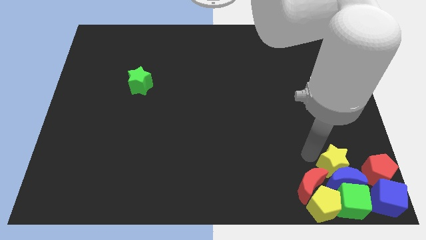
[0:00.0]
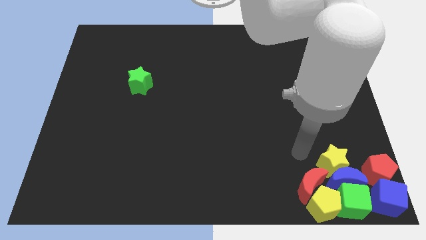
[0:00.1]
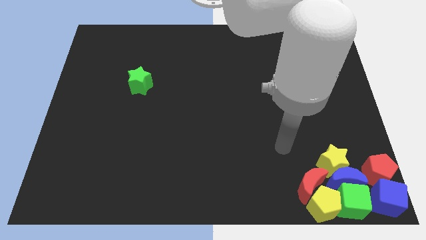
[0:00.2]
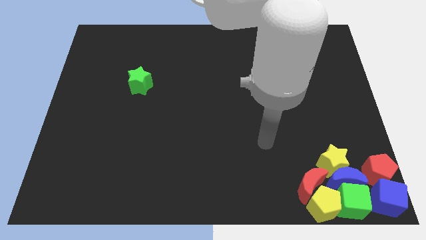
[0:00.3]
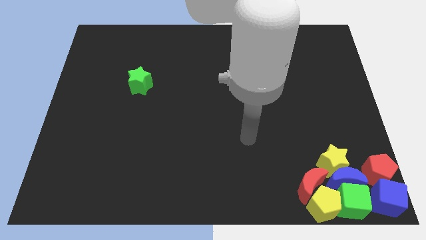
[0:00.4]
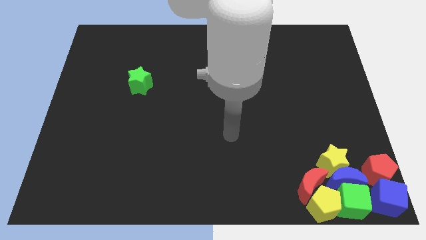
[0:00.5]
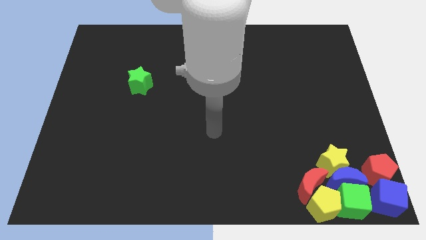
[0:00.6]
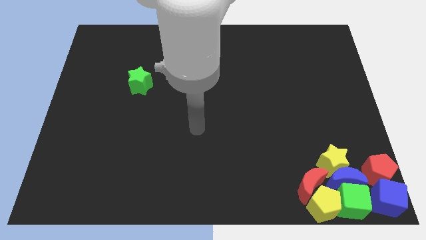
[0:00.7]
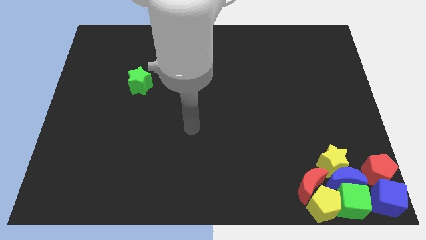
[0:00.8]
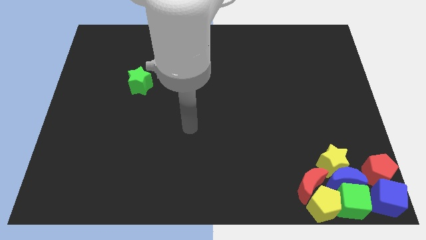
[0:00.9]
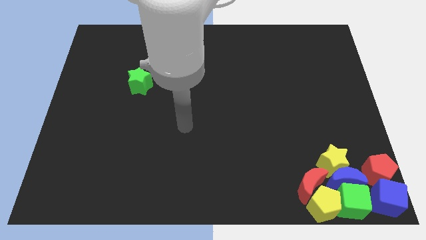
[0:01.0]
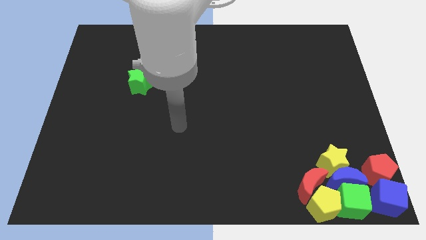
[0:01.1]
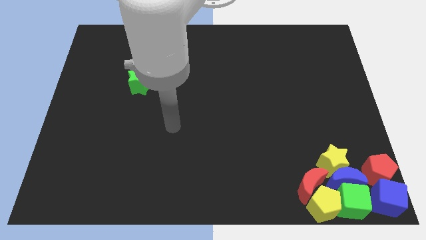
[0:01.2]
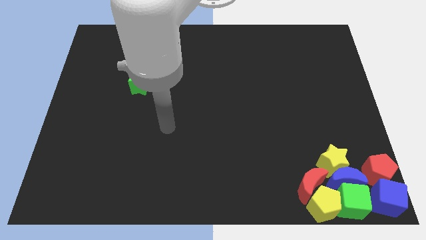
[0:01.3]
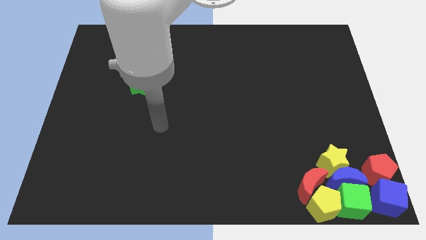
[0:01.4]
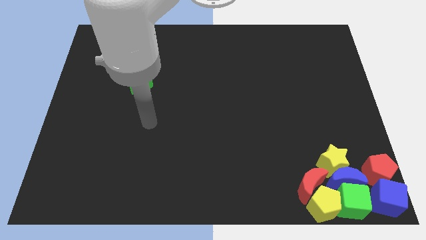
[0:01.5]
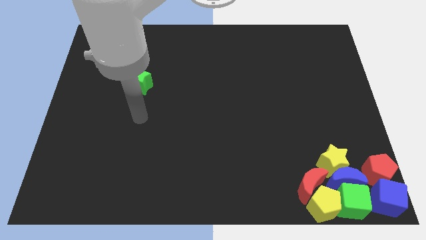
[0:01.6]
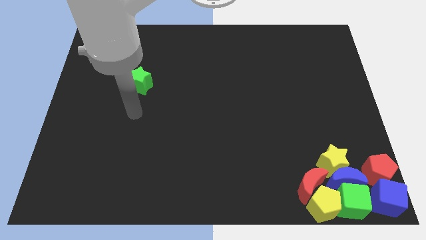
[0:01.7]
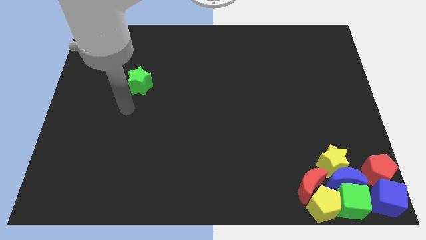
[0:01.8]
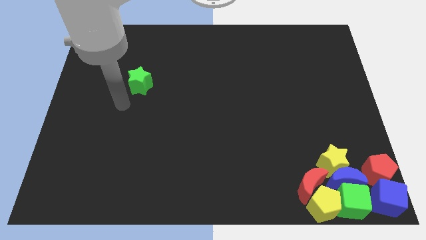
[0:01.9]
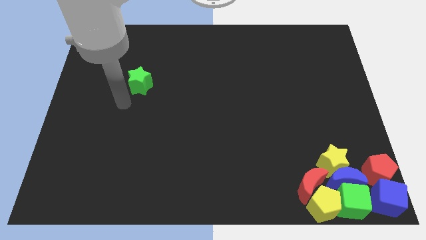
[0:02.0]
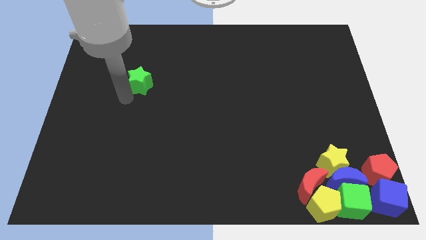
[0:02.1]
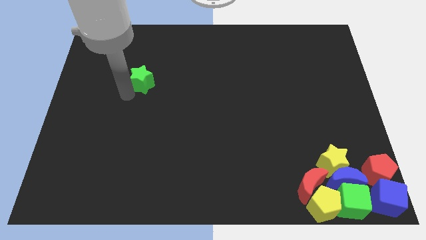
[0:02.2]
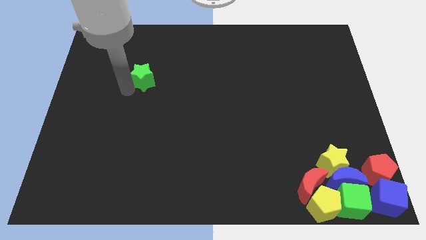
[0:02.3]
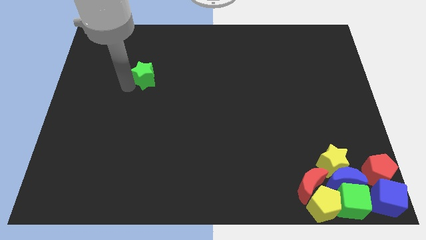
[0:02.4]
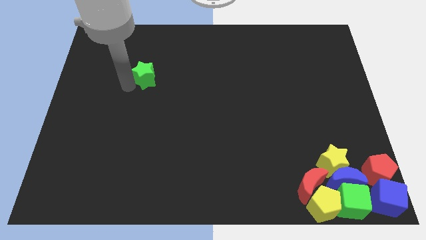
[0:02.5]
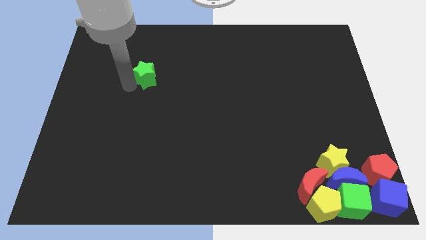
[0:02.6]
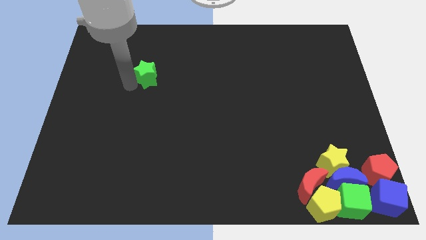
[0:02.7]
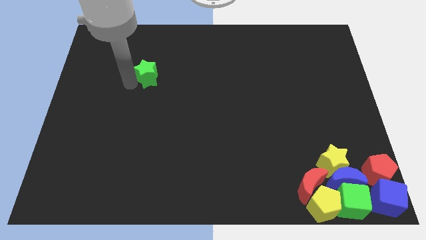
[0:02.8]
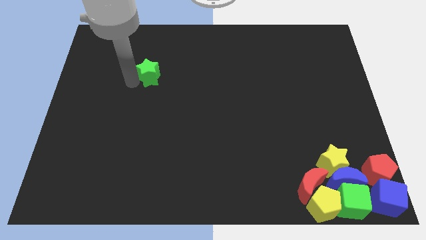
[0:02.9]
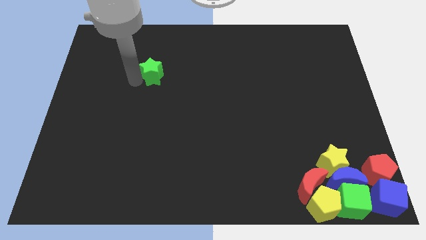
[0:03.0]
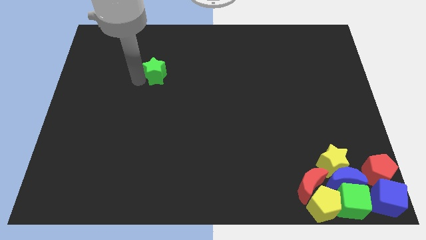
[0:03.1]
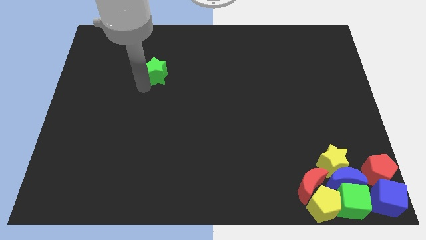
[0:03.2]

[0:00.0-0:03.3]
push the green star towards the top side of the board

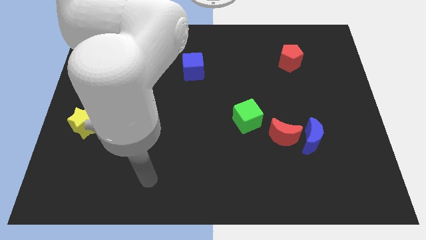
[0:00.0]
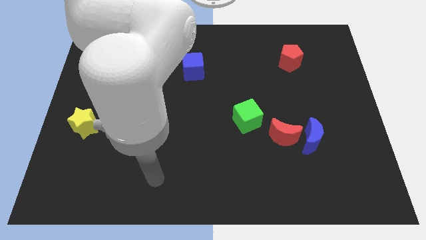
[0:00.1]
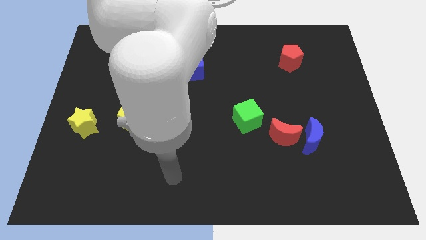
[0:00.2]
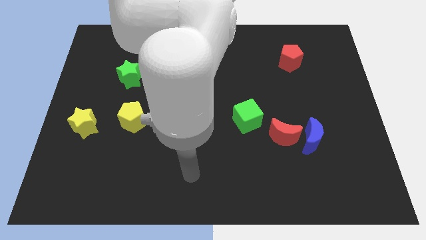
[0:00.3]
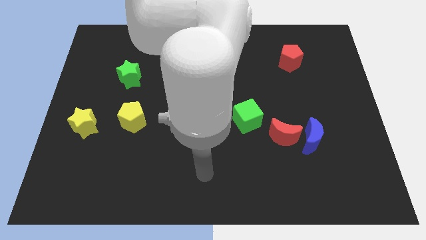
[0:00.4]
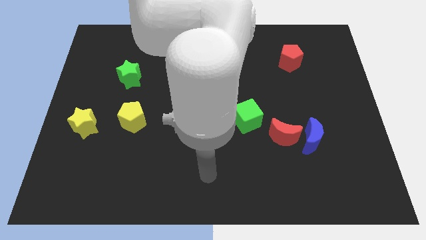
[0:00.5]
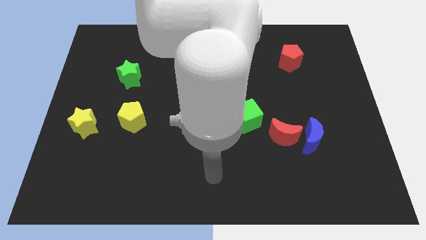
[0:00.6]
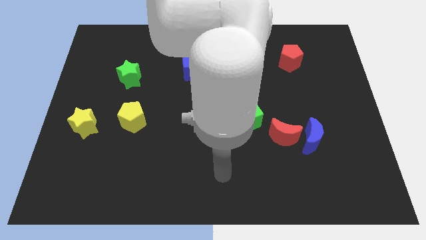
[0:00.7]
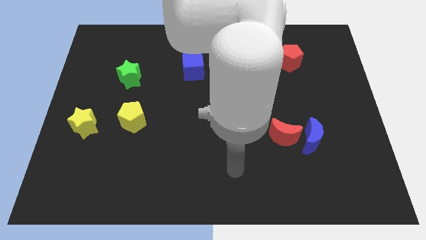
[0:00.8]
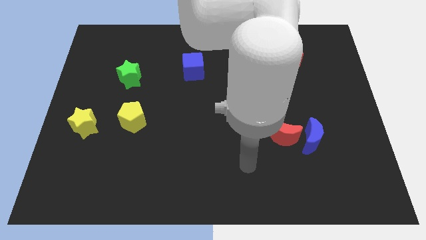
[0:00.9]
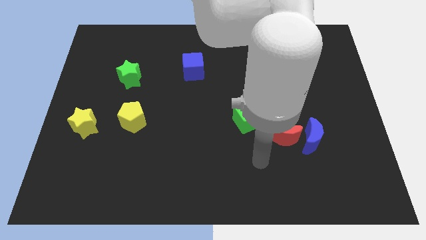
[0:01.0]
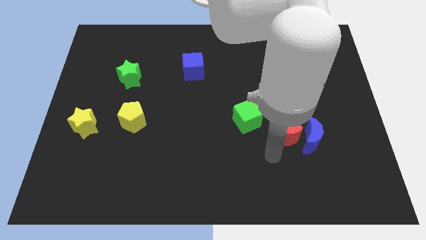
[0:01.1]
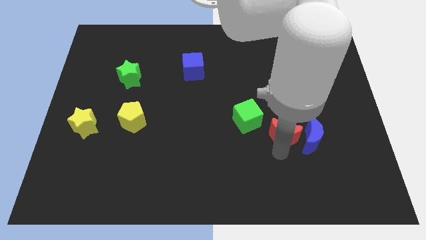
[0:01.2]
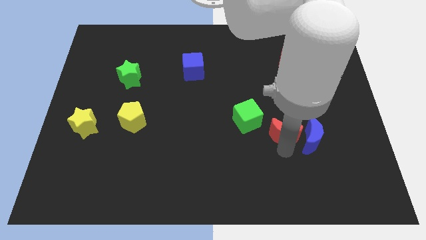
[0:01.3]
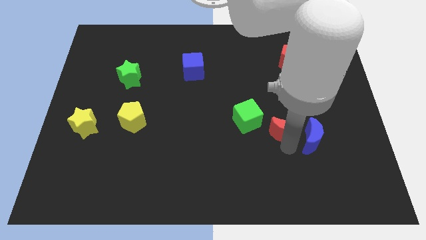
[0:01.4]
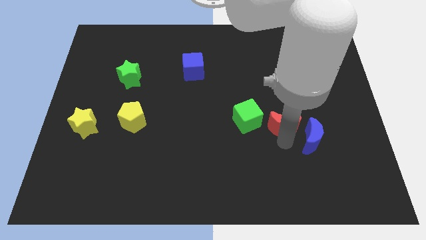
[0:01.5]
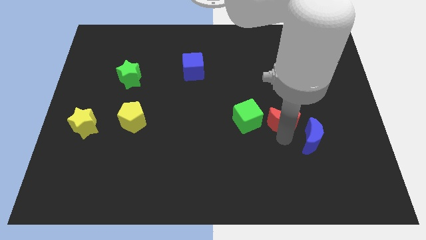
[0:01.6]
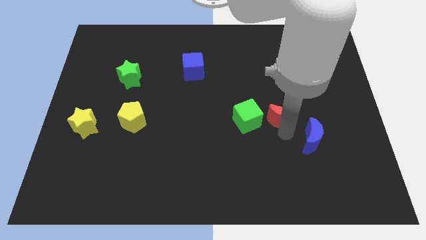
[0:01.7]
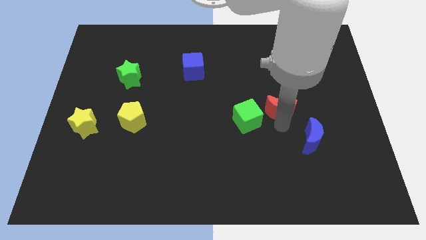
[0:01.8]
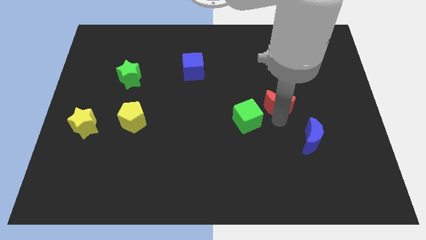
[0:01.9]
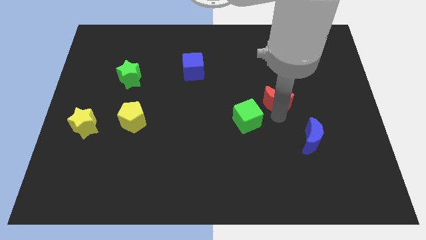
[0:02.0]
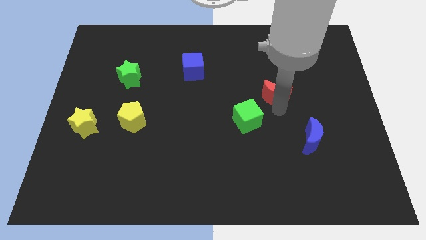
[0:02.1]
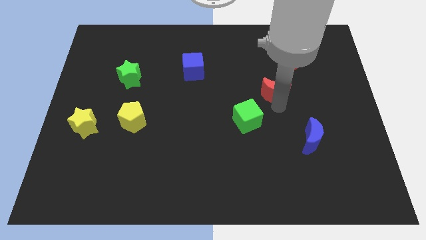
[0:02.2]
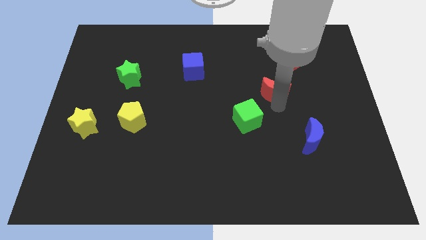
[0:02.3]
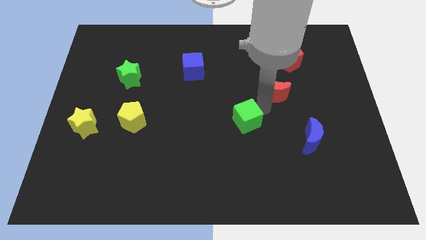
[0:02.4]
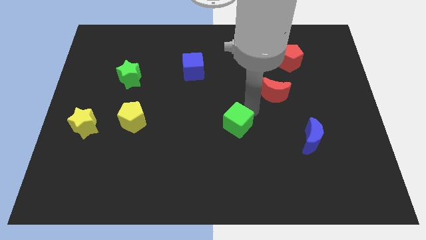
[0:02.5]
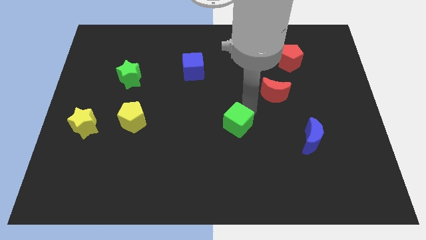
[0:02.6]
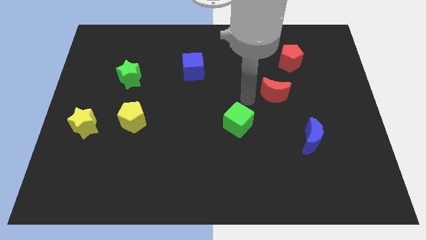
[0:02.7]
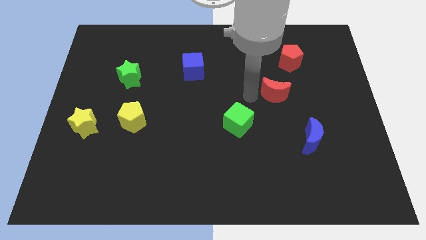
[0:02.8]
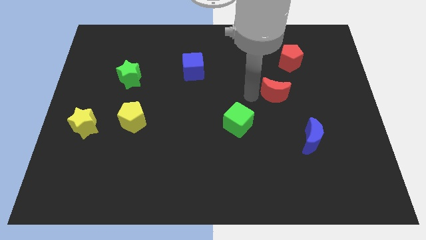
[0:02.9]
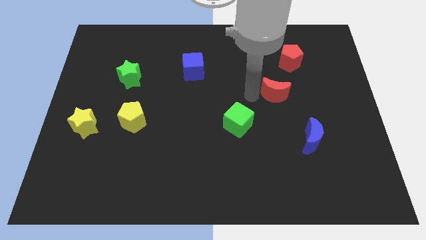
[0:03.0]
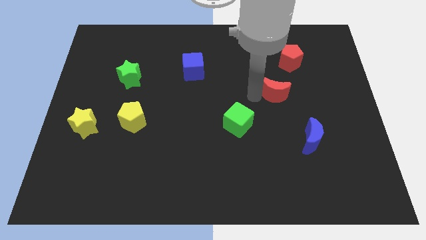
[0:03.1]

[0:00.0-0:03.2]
move the red moon to the center

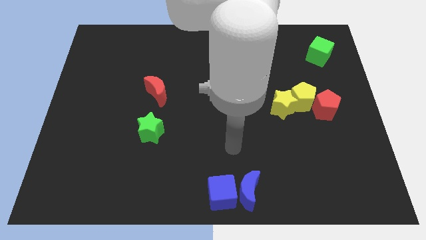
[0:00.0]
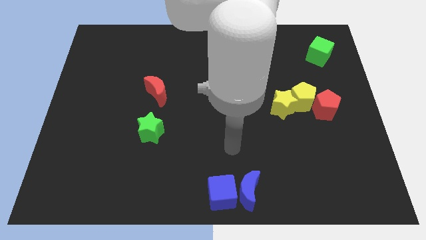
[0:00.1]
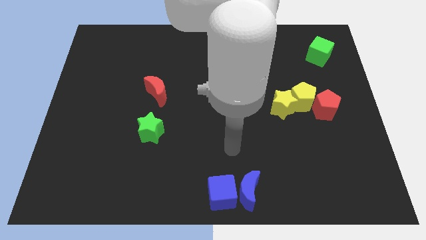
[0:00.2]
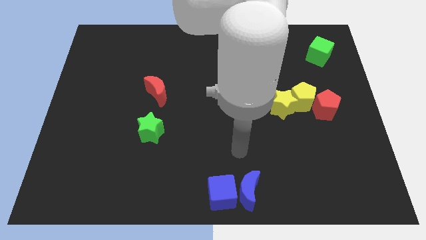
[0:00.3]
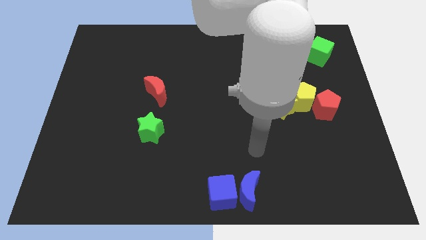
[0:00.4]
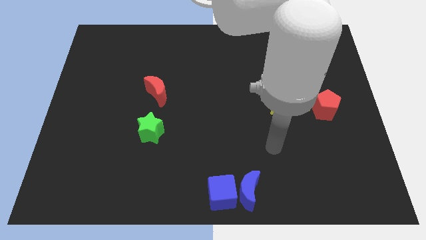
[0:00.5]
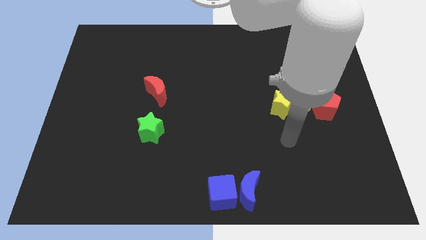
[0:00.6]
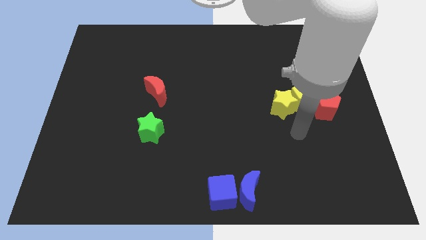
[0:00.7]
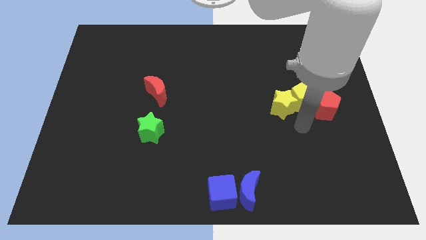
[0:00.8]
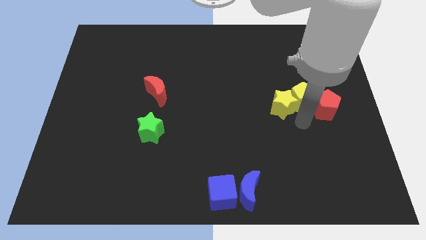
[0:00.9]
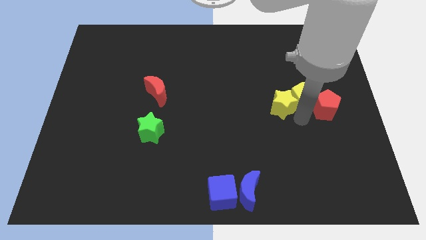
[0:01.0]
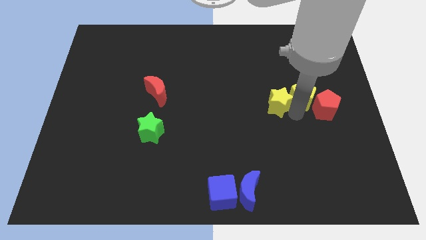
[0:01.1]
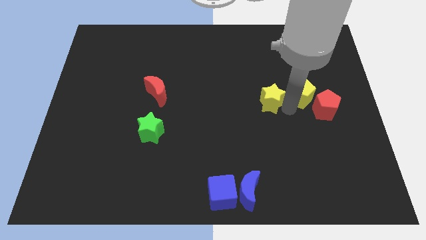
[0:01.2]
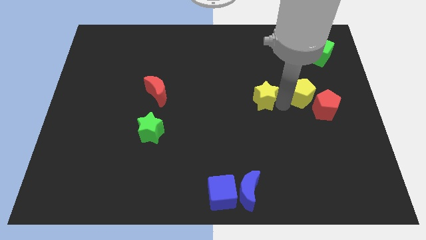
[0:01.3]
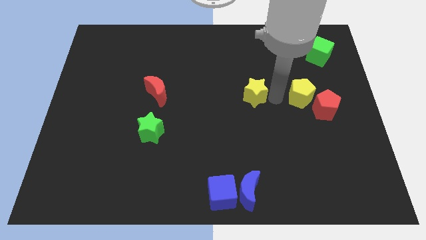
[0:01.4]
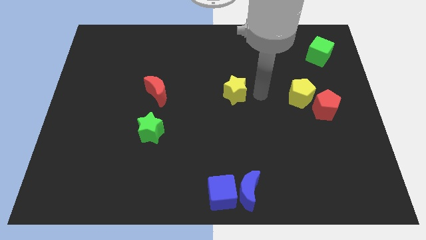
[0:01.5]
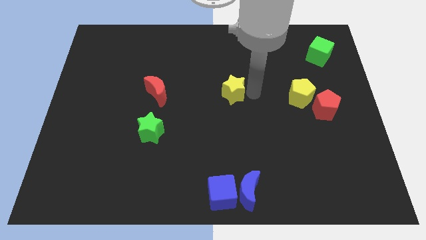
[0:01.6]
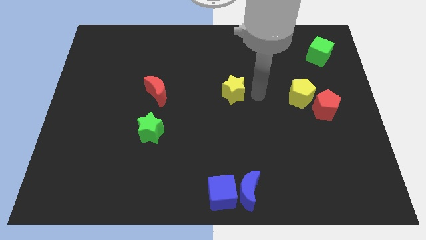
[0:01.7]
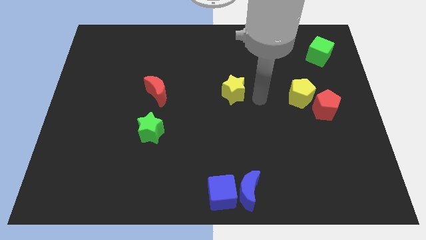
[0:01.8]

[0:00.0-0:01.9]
separate yellow star from the yellow pentagon

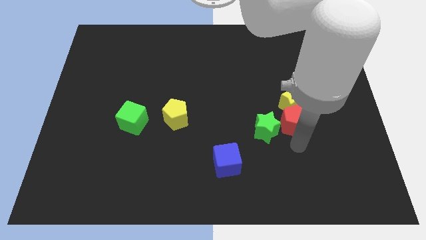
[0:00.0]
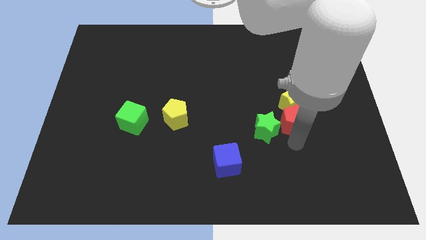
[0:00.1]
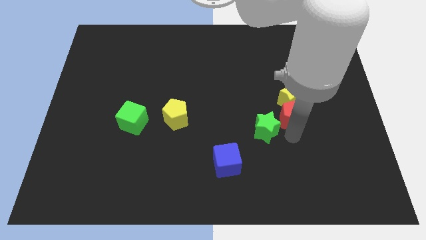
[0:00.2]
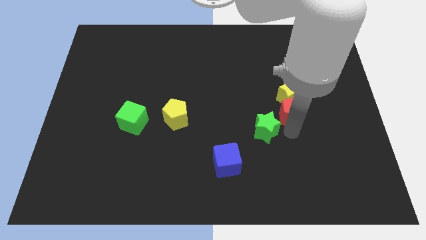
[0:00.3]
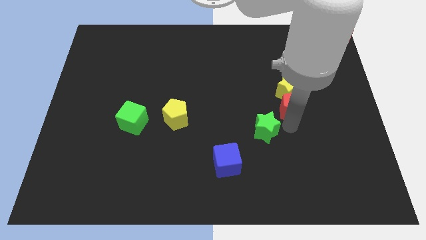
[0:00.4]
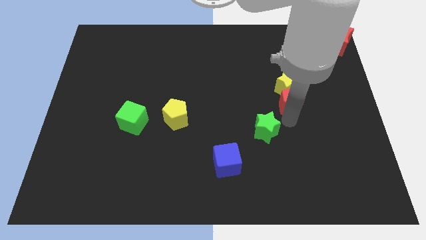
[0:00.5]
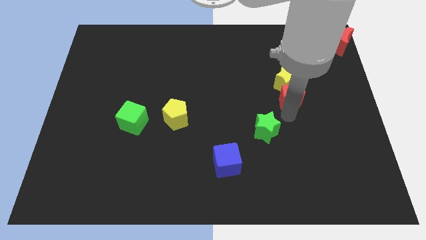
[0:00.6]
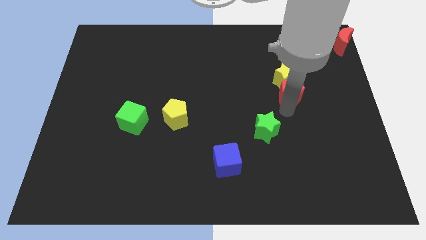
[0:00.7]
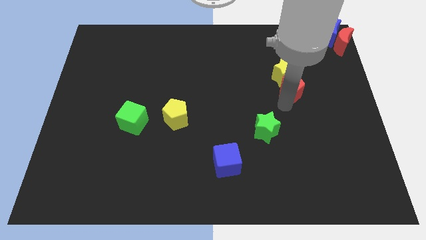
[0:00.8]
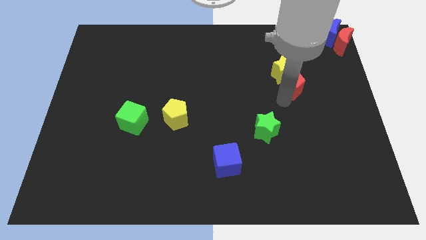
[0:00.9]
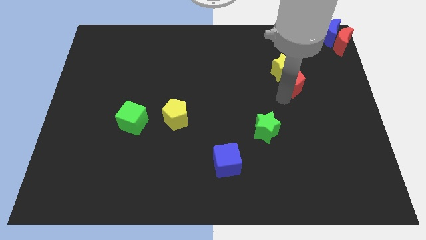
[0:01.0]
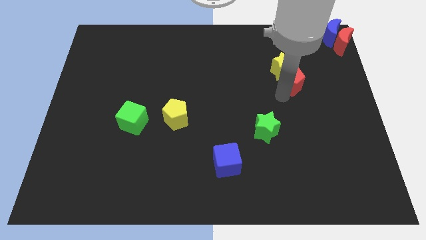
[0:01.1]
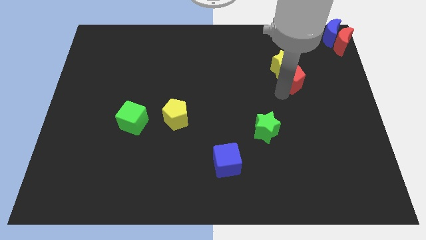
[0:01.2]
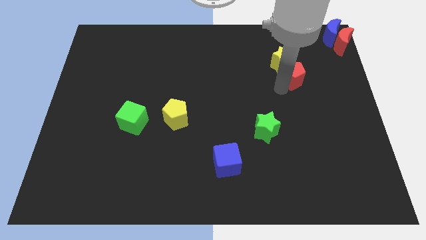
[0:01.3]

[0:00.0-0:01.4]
move red pentagon and yellow star towards top
